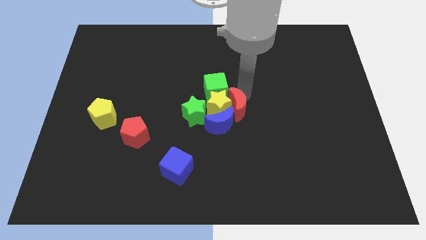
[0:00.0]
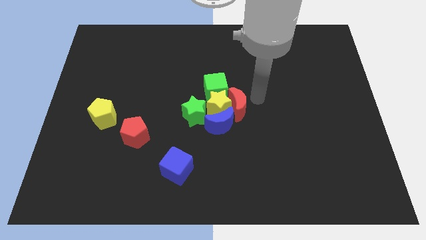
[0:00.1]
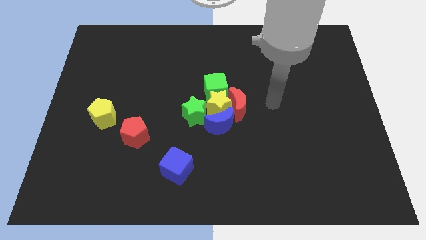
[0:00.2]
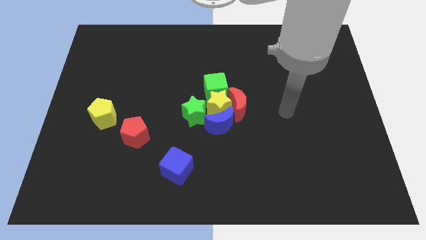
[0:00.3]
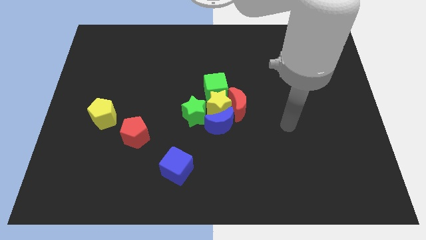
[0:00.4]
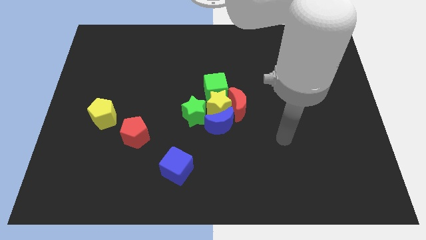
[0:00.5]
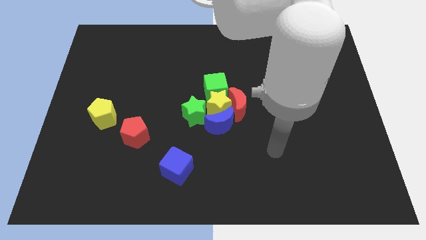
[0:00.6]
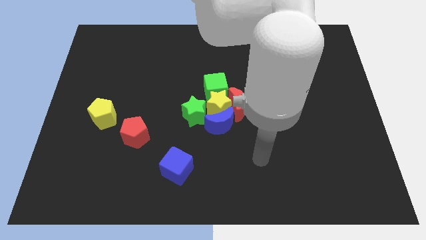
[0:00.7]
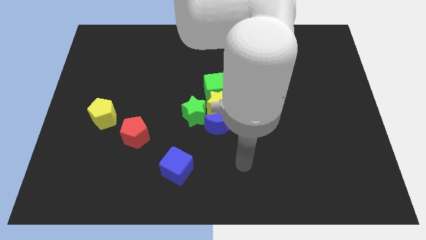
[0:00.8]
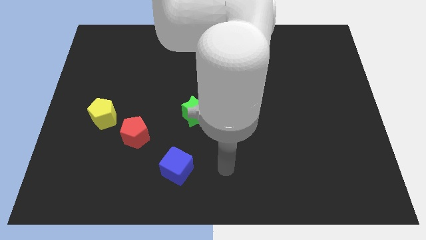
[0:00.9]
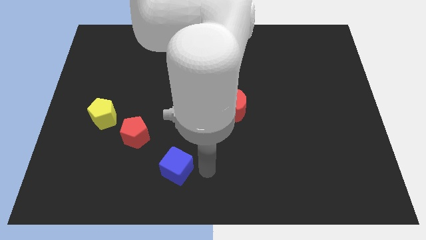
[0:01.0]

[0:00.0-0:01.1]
move the arm away from the red moon

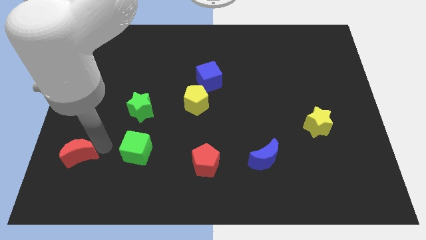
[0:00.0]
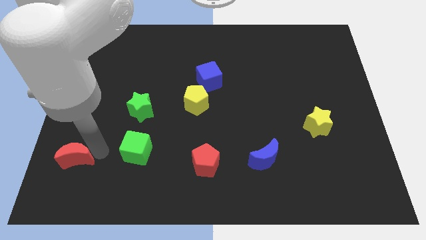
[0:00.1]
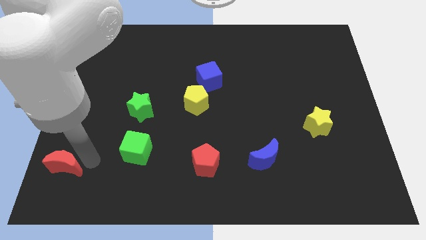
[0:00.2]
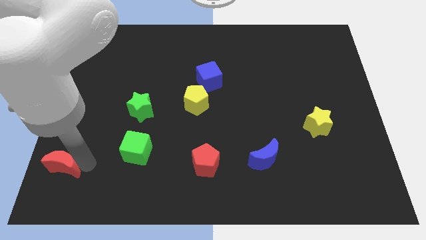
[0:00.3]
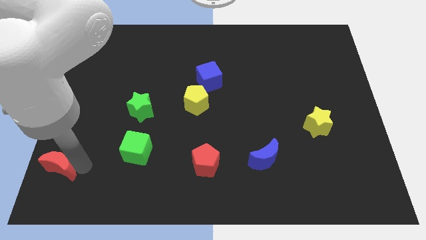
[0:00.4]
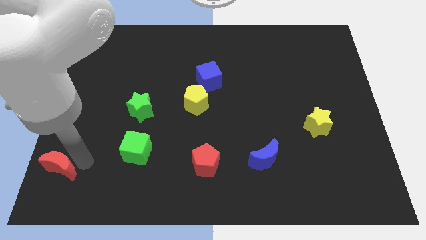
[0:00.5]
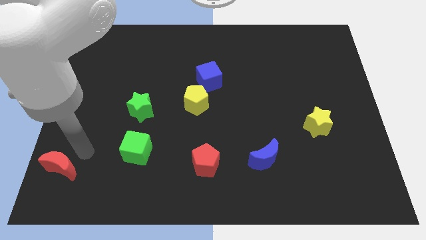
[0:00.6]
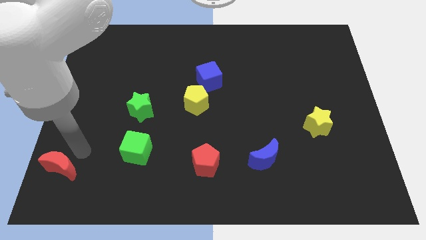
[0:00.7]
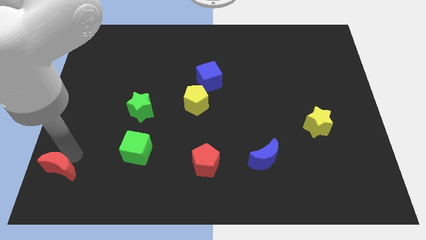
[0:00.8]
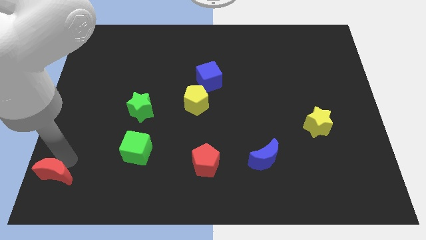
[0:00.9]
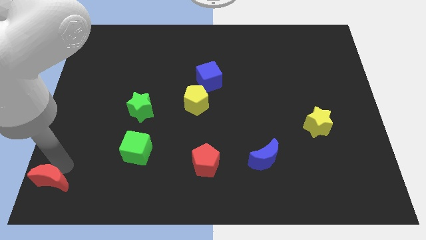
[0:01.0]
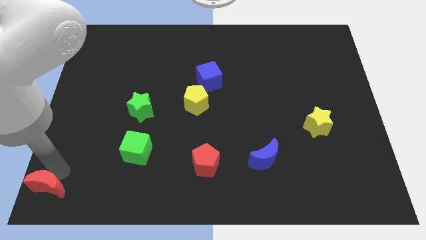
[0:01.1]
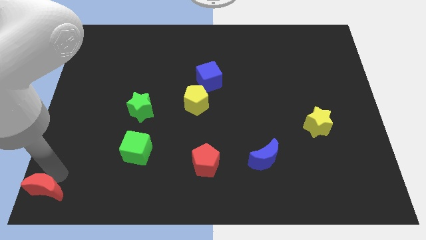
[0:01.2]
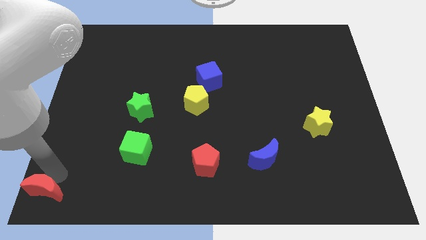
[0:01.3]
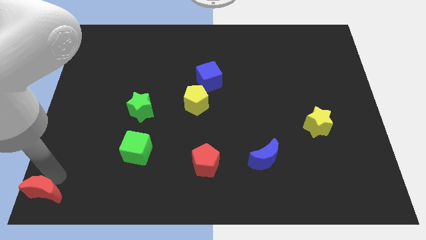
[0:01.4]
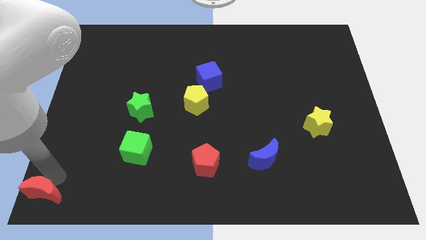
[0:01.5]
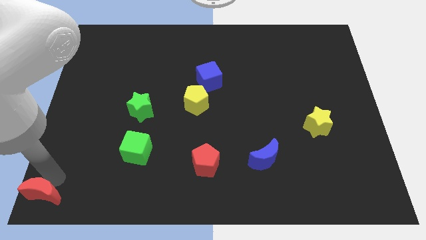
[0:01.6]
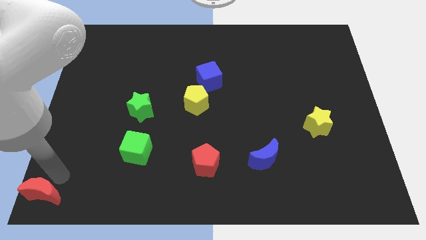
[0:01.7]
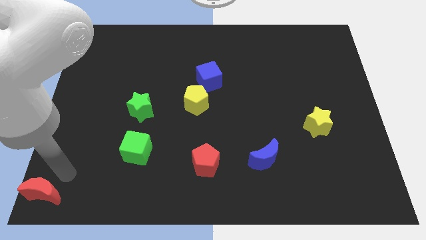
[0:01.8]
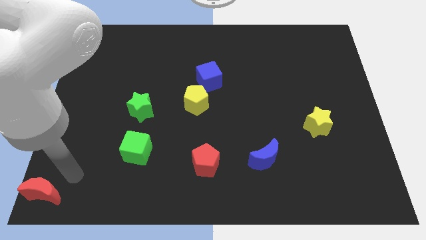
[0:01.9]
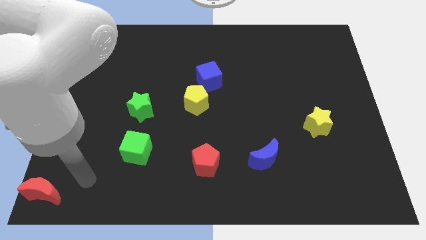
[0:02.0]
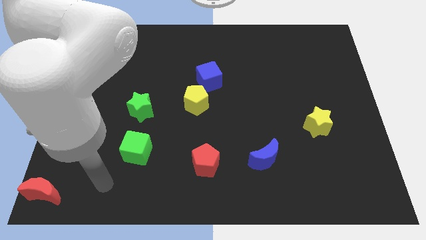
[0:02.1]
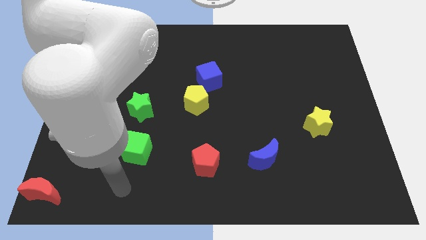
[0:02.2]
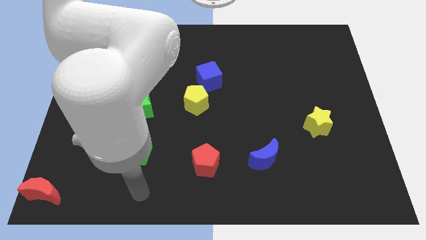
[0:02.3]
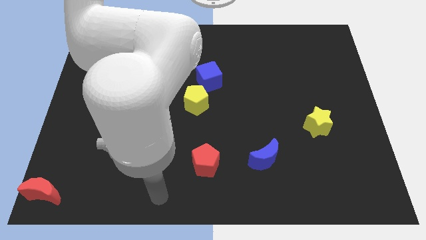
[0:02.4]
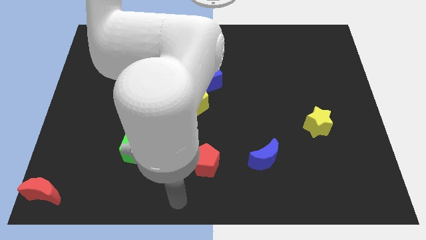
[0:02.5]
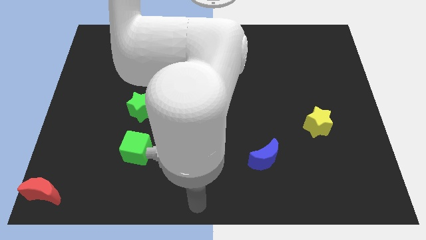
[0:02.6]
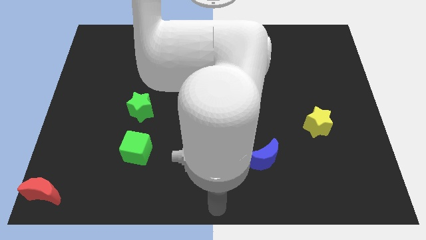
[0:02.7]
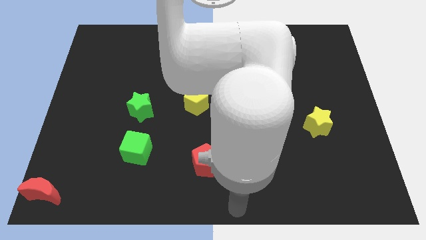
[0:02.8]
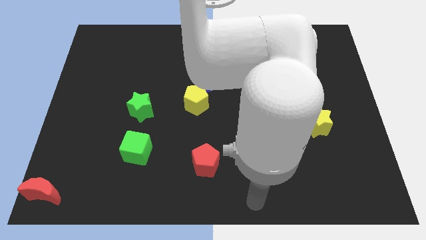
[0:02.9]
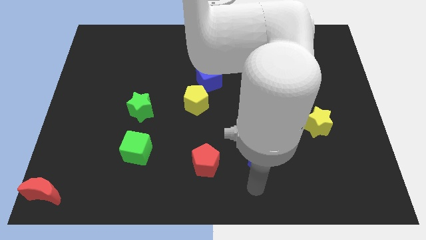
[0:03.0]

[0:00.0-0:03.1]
slide red crescent at bottom left corner

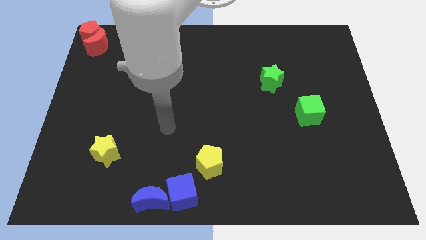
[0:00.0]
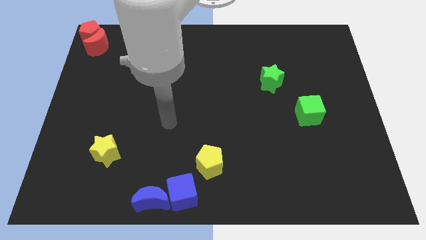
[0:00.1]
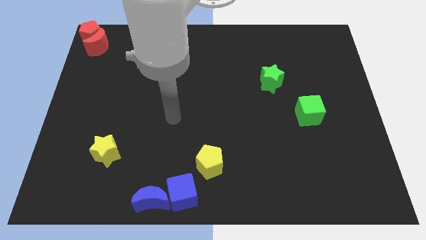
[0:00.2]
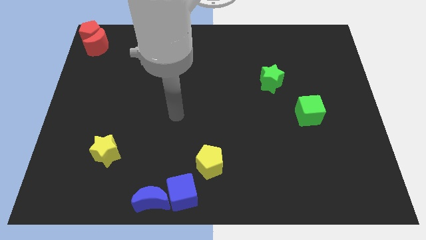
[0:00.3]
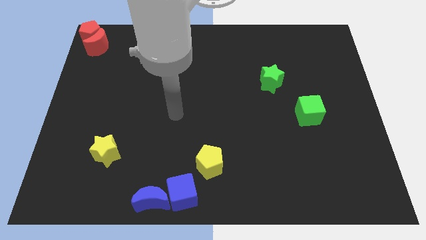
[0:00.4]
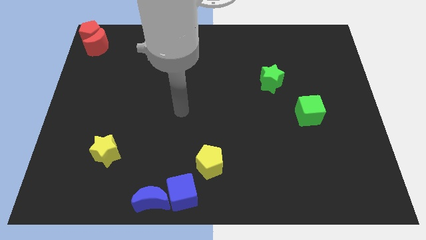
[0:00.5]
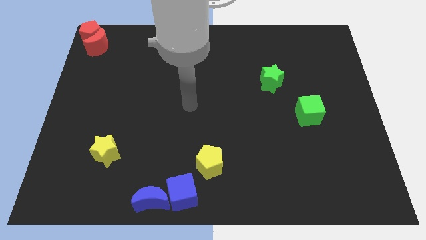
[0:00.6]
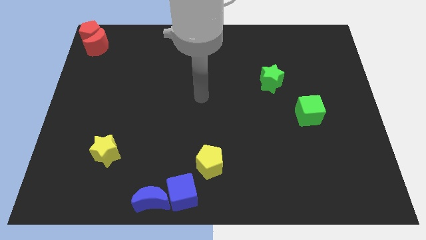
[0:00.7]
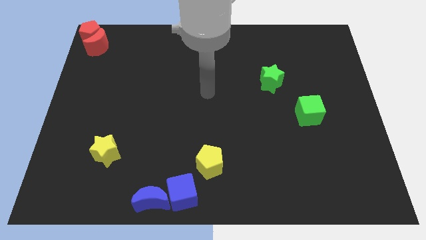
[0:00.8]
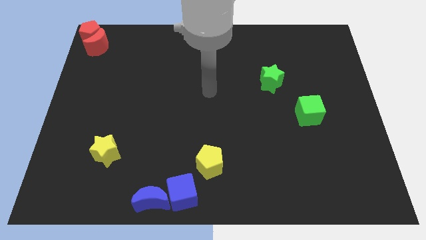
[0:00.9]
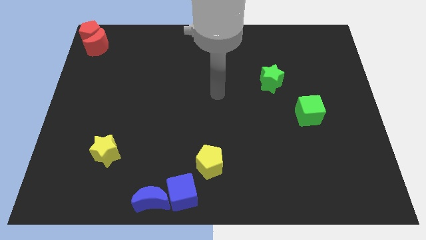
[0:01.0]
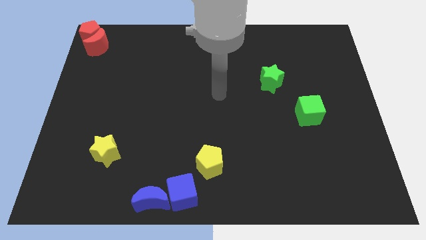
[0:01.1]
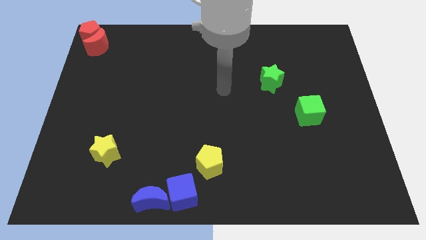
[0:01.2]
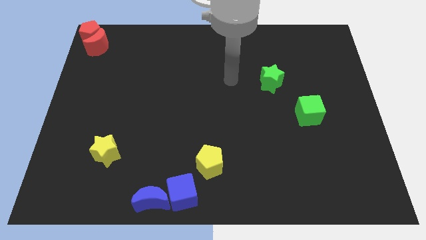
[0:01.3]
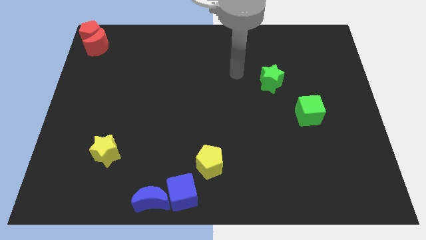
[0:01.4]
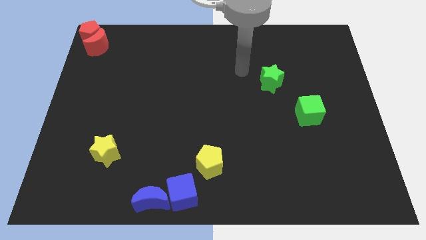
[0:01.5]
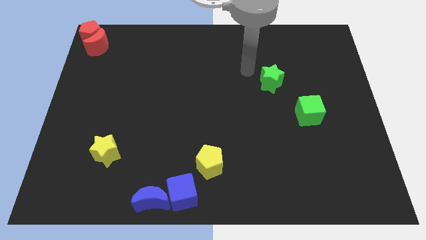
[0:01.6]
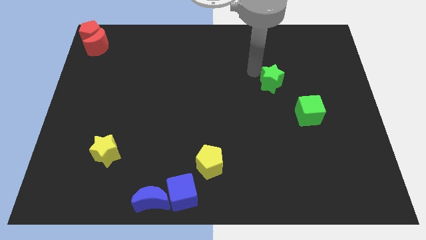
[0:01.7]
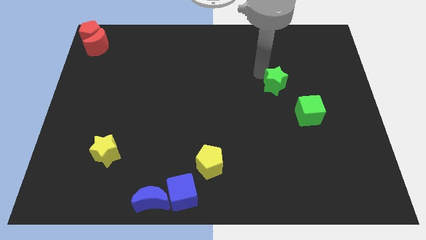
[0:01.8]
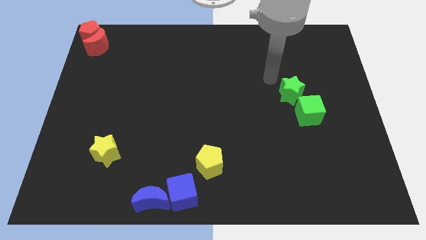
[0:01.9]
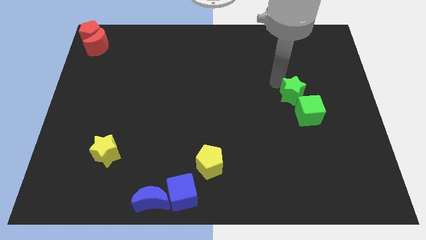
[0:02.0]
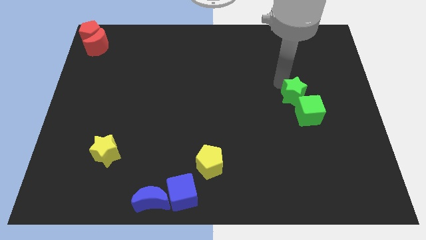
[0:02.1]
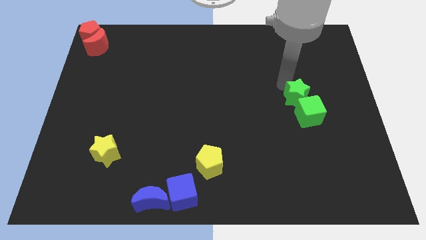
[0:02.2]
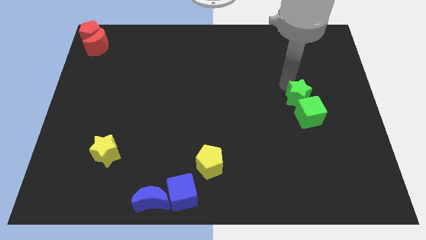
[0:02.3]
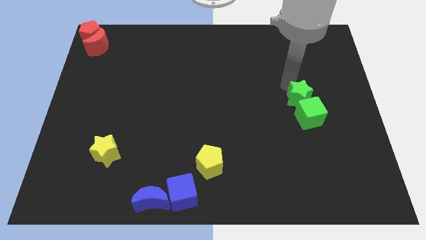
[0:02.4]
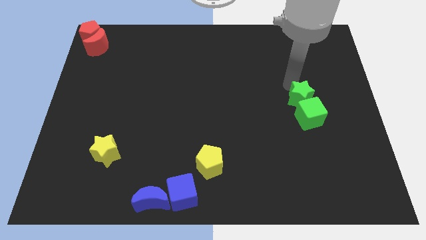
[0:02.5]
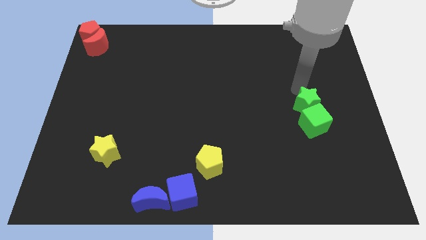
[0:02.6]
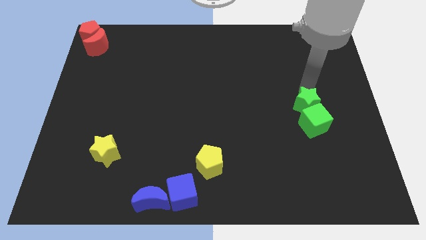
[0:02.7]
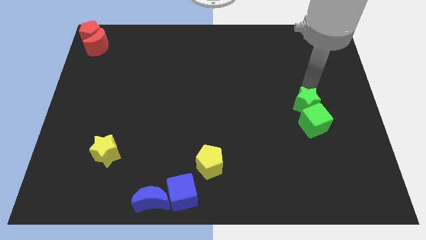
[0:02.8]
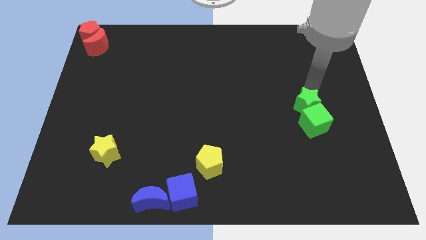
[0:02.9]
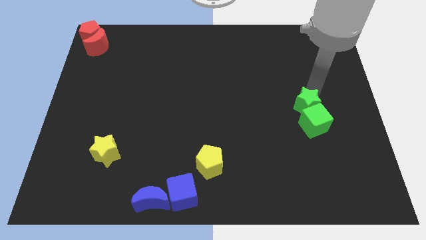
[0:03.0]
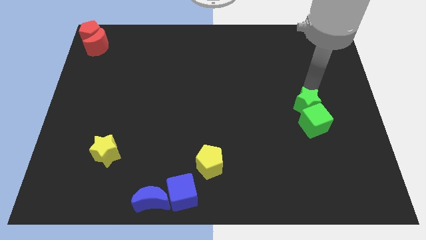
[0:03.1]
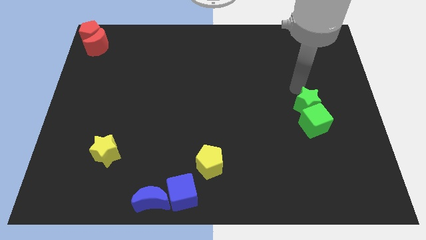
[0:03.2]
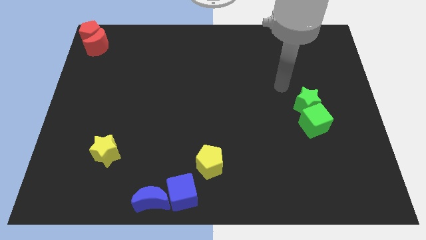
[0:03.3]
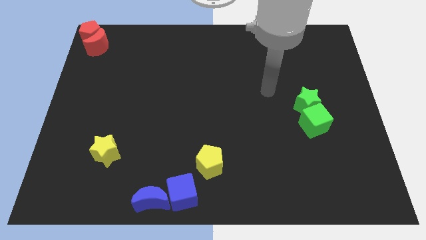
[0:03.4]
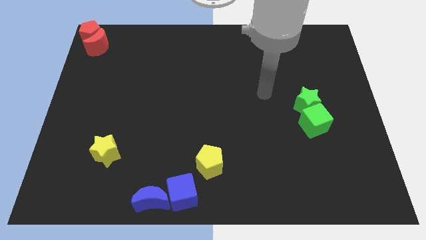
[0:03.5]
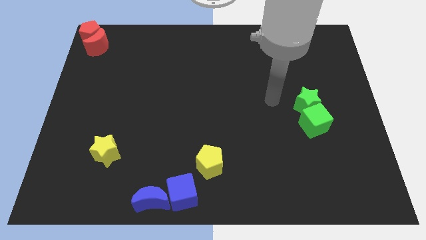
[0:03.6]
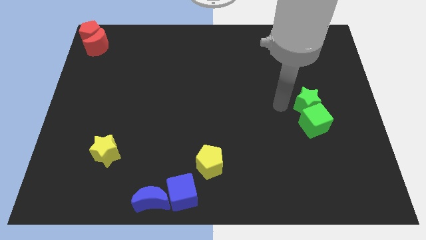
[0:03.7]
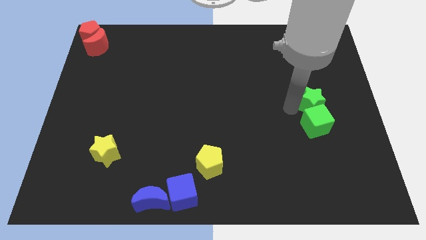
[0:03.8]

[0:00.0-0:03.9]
push the green star into the green cube

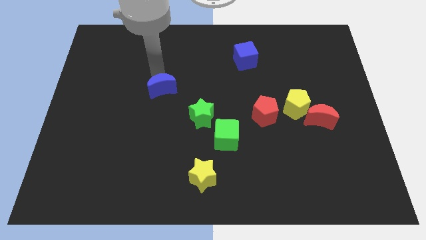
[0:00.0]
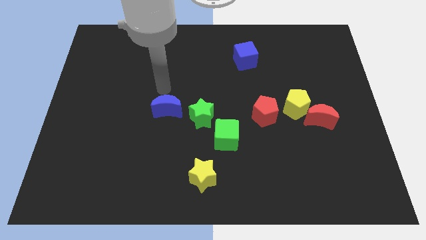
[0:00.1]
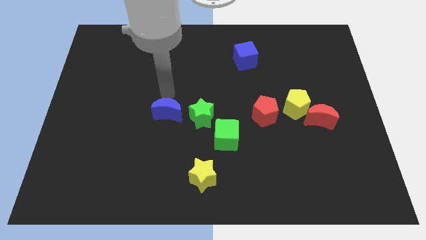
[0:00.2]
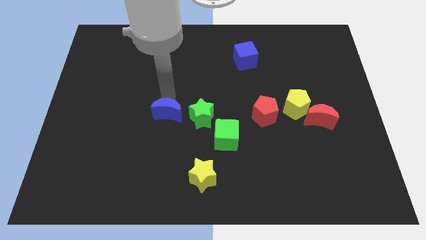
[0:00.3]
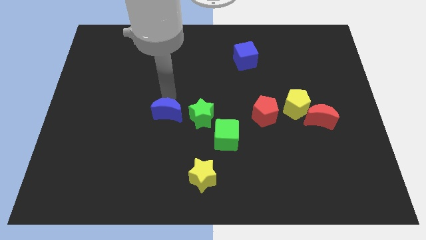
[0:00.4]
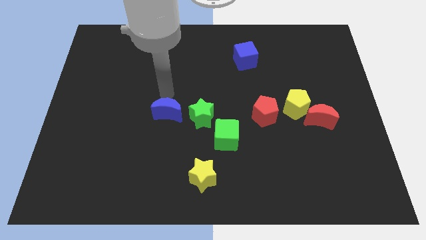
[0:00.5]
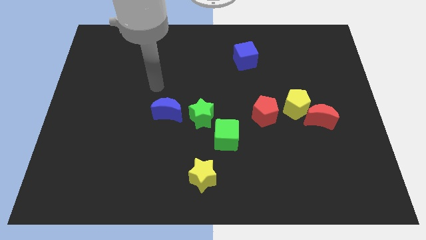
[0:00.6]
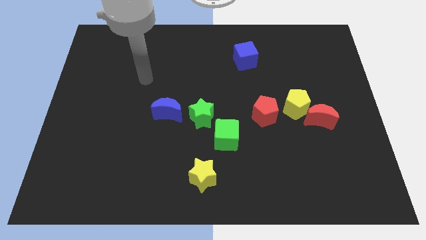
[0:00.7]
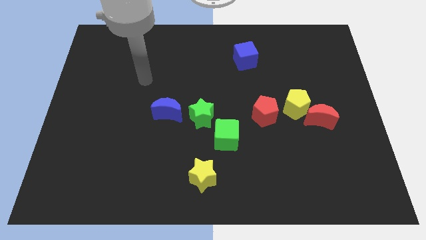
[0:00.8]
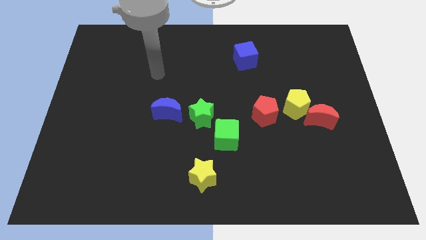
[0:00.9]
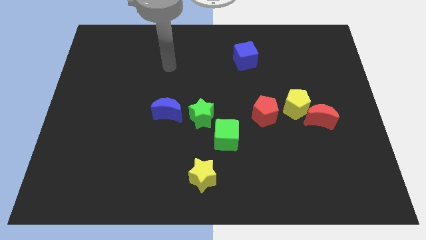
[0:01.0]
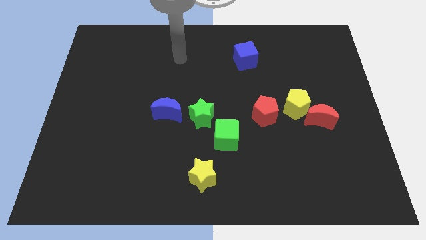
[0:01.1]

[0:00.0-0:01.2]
push blue crescent towards the left of the green star
